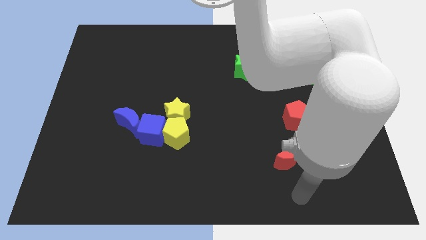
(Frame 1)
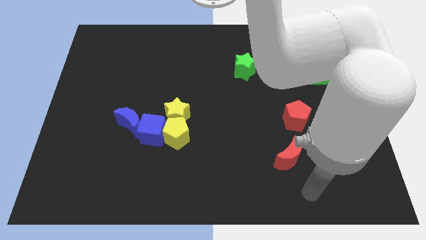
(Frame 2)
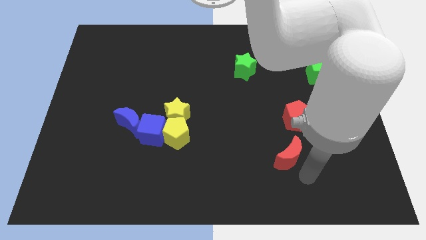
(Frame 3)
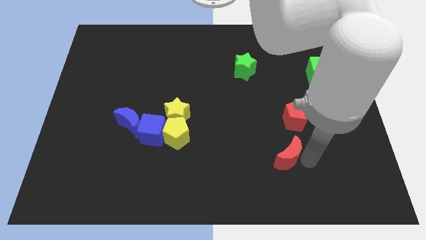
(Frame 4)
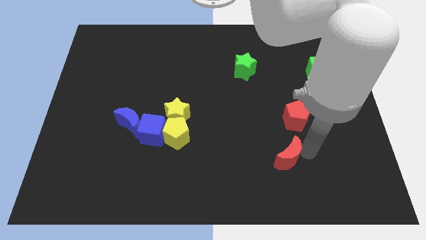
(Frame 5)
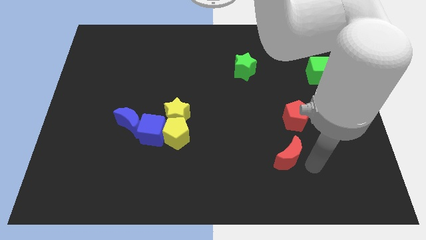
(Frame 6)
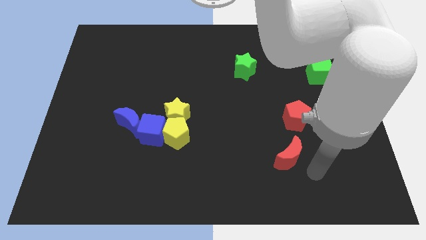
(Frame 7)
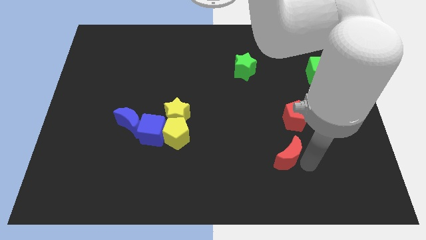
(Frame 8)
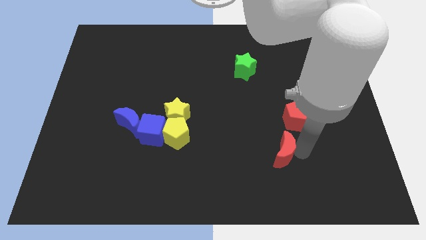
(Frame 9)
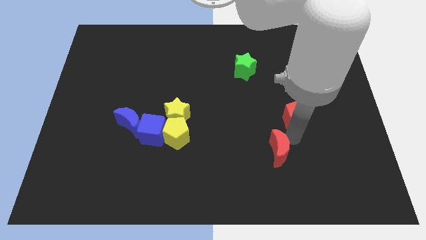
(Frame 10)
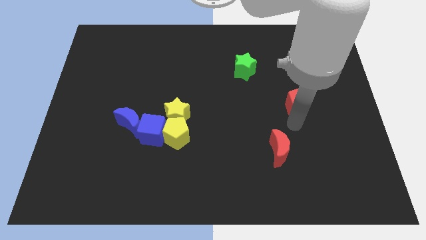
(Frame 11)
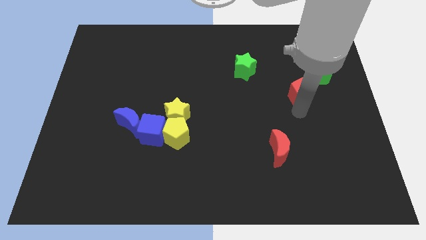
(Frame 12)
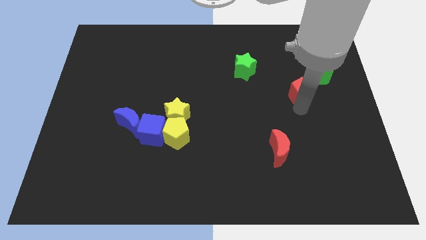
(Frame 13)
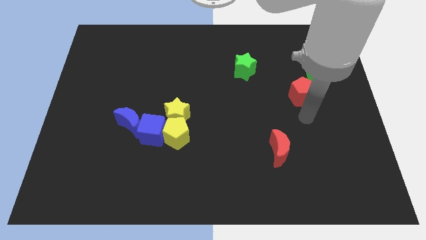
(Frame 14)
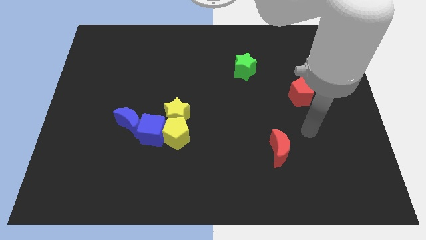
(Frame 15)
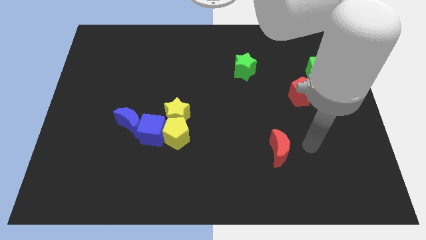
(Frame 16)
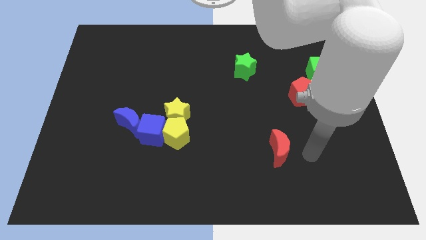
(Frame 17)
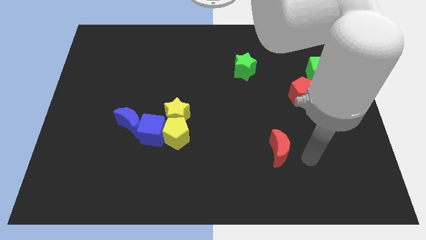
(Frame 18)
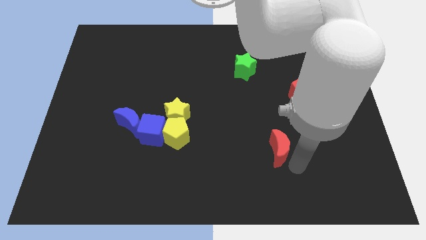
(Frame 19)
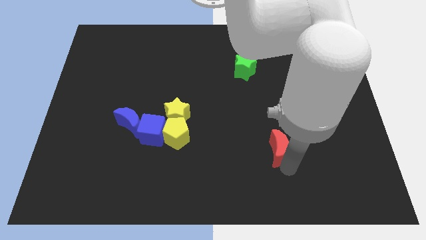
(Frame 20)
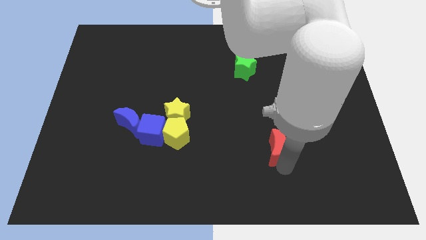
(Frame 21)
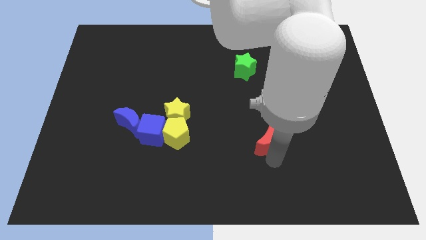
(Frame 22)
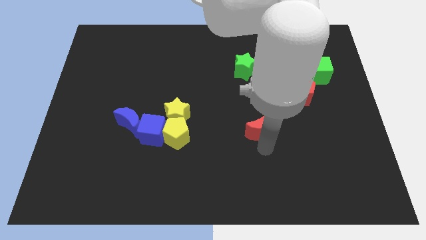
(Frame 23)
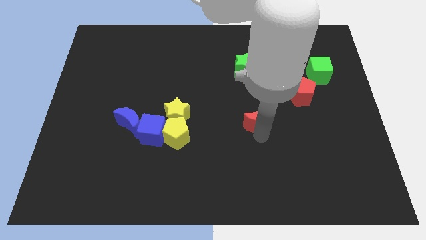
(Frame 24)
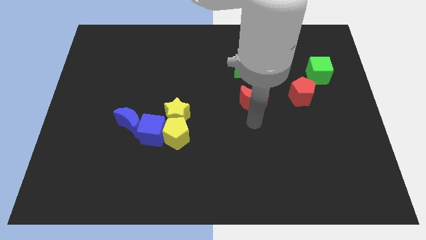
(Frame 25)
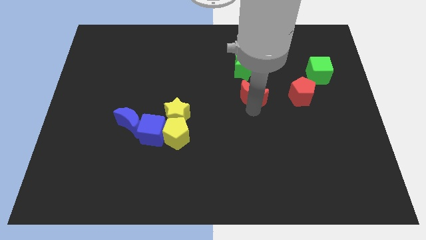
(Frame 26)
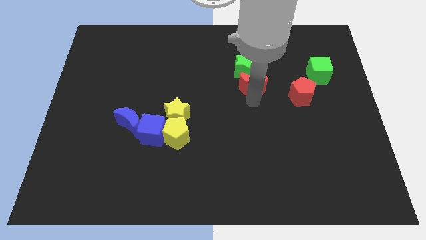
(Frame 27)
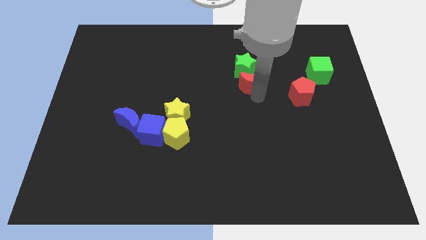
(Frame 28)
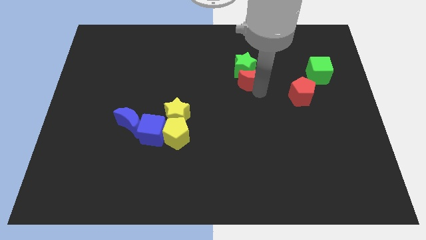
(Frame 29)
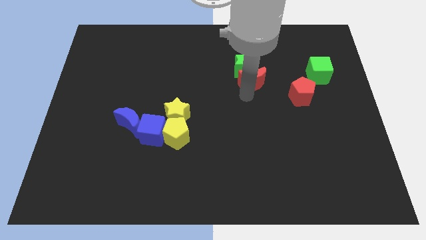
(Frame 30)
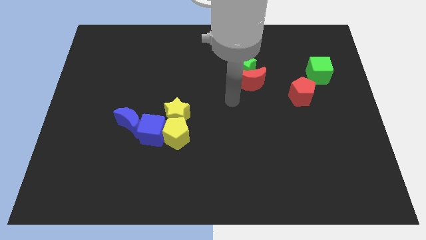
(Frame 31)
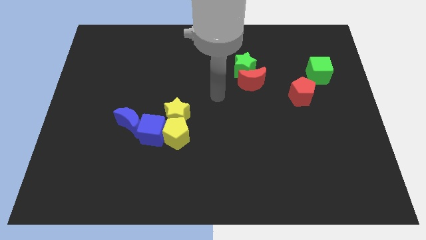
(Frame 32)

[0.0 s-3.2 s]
move the red moon into the green star

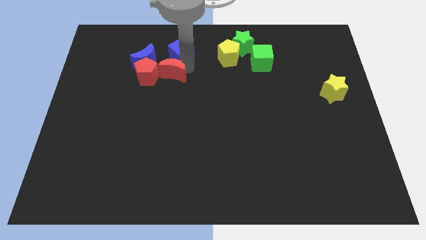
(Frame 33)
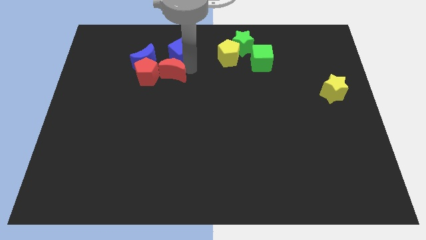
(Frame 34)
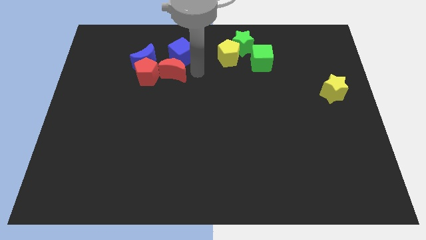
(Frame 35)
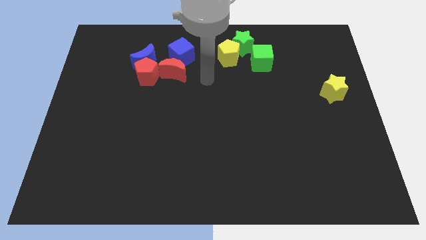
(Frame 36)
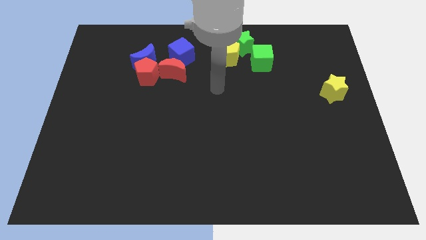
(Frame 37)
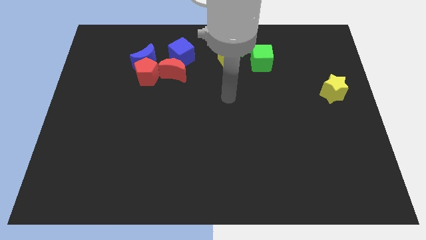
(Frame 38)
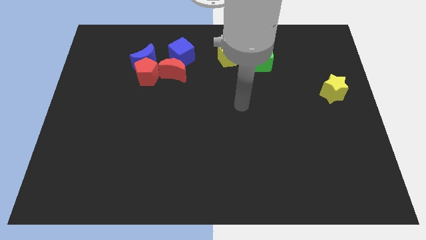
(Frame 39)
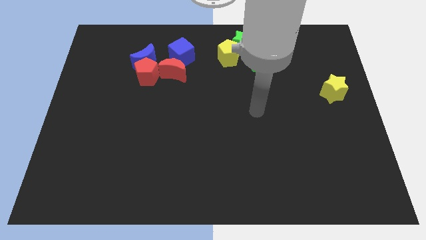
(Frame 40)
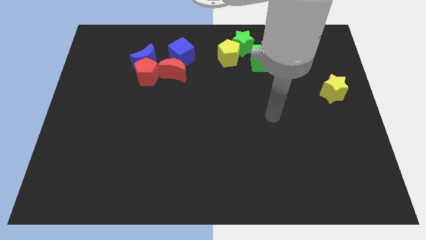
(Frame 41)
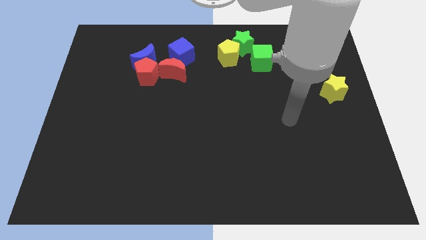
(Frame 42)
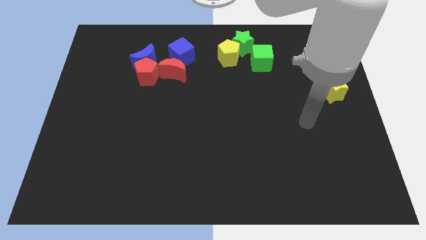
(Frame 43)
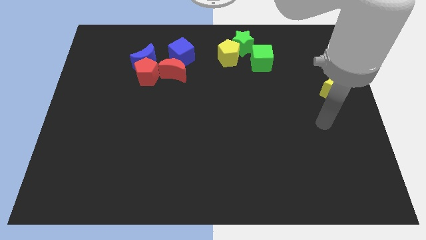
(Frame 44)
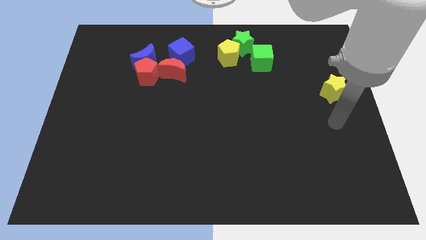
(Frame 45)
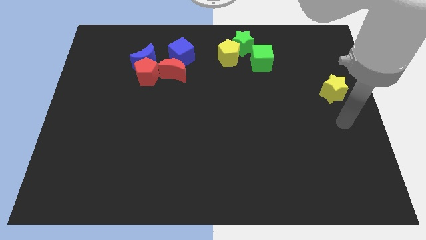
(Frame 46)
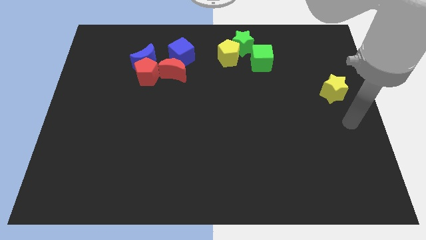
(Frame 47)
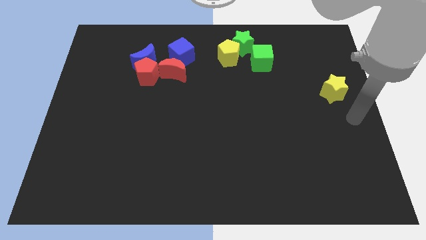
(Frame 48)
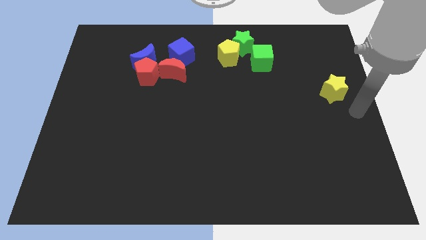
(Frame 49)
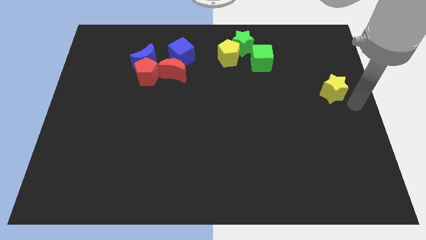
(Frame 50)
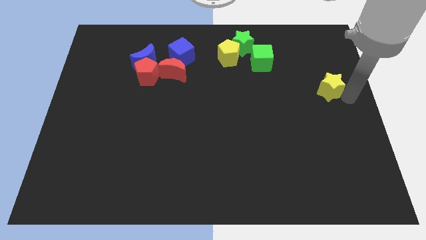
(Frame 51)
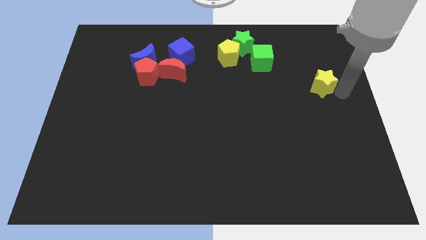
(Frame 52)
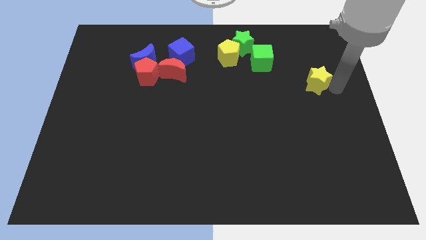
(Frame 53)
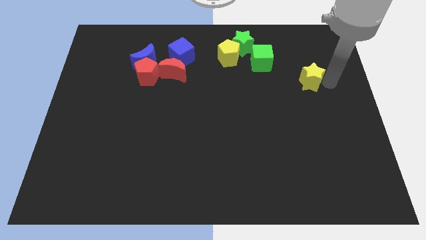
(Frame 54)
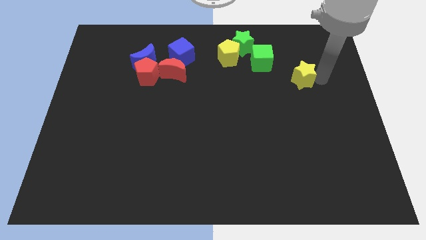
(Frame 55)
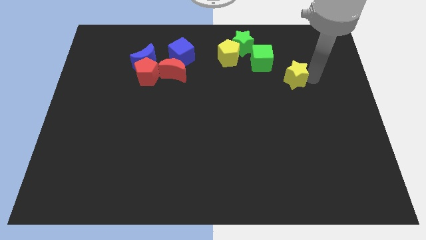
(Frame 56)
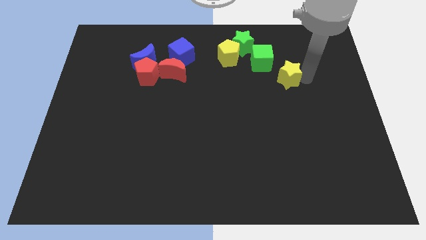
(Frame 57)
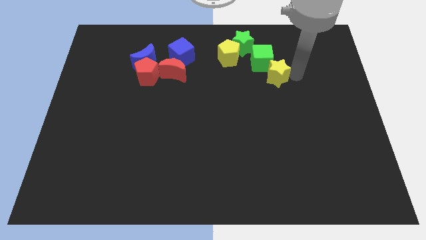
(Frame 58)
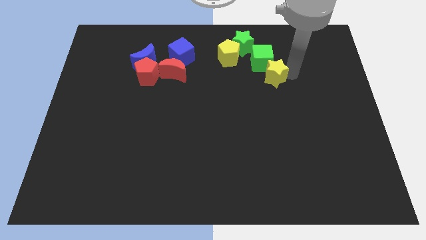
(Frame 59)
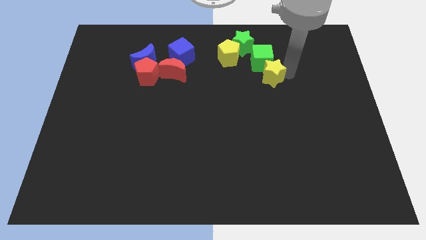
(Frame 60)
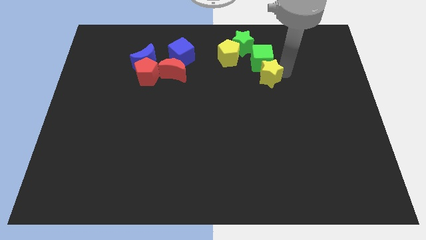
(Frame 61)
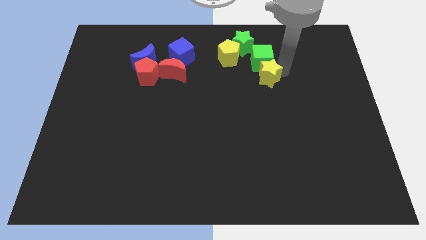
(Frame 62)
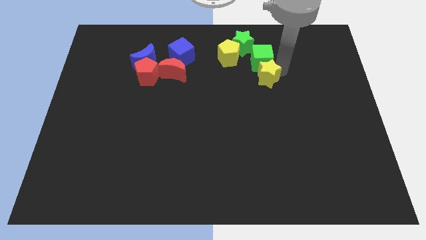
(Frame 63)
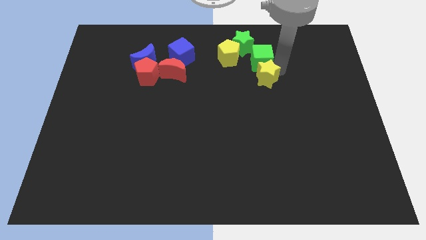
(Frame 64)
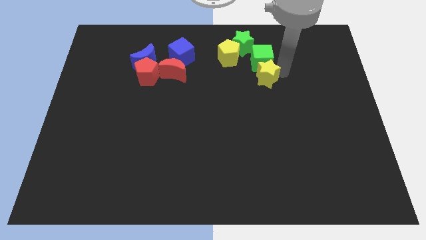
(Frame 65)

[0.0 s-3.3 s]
push the yellow star into the bottom side of the green cube

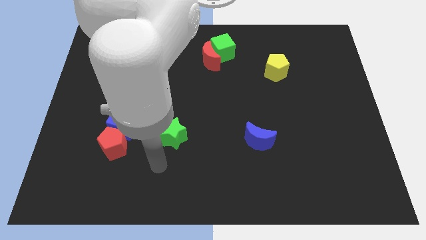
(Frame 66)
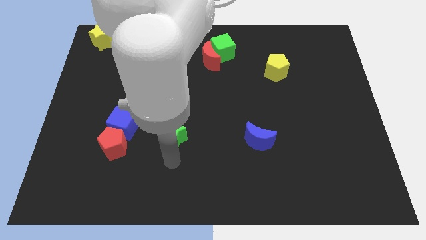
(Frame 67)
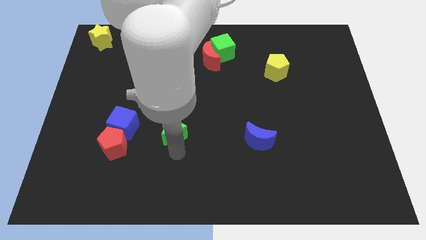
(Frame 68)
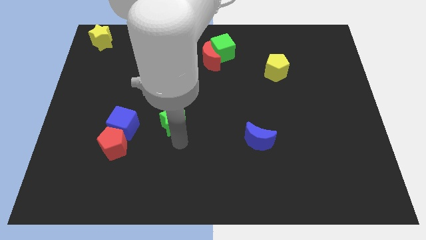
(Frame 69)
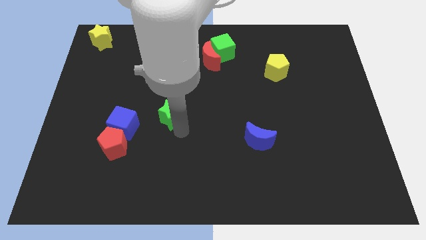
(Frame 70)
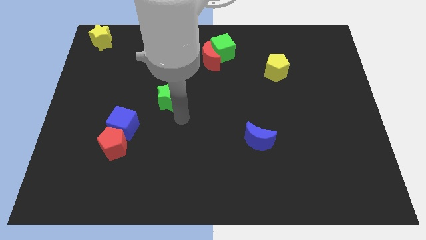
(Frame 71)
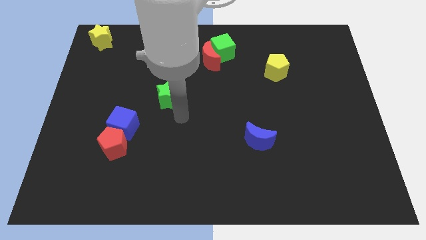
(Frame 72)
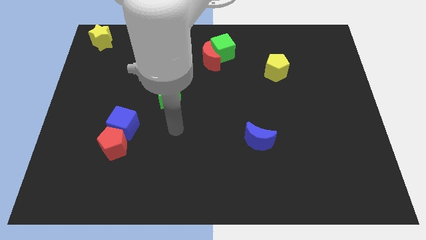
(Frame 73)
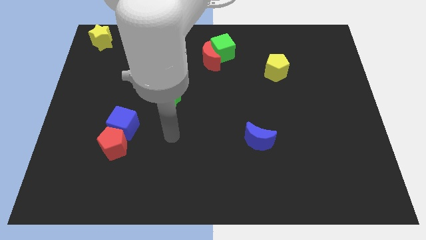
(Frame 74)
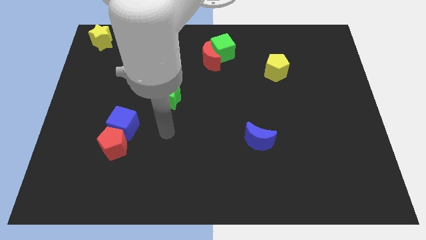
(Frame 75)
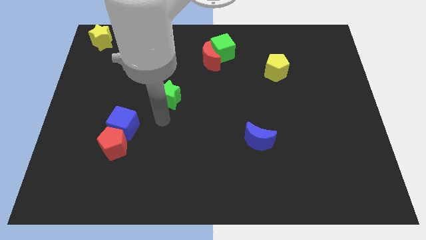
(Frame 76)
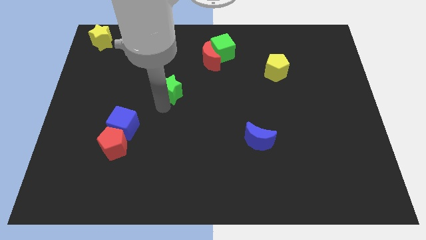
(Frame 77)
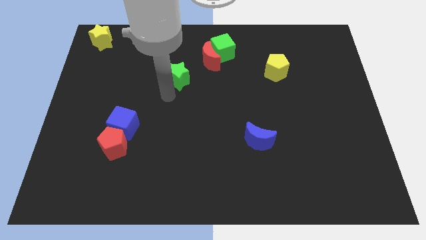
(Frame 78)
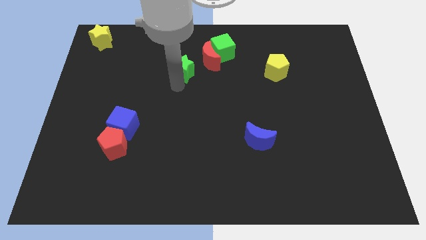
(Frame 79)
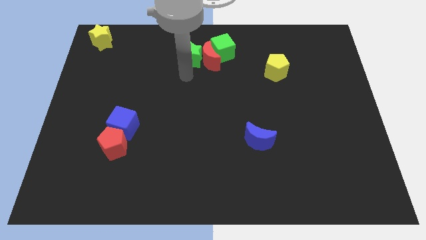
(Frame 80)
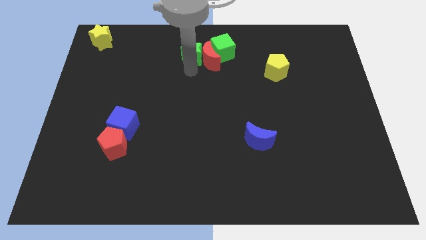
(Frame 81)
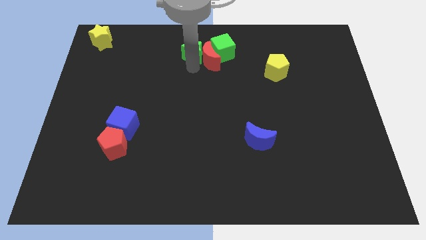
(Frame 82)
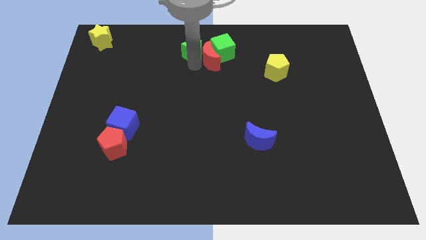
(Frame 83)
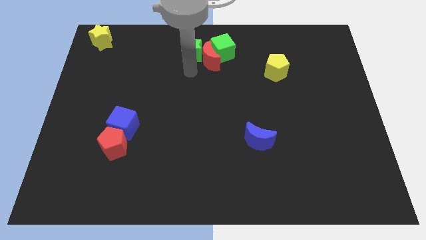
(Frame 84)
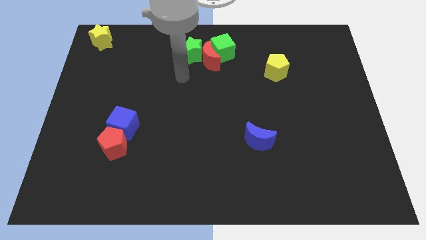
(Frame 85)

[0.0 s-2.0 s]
place the green star to the left of red crescent

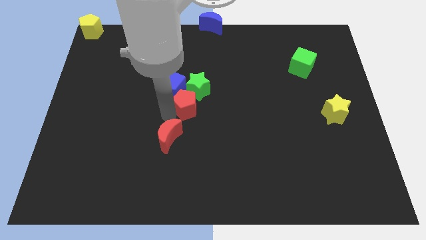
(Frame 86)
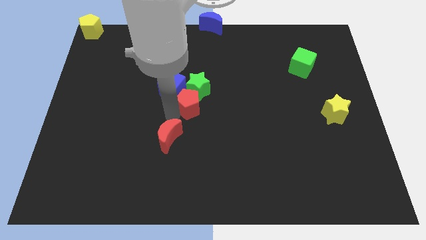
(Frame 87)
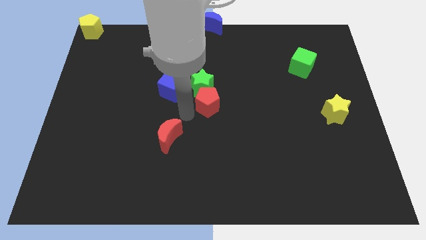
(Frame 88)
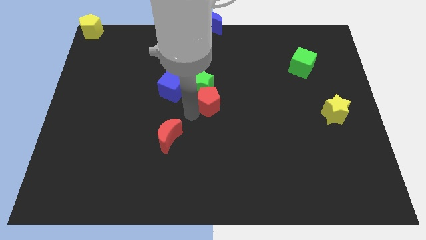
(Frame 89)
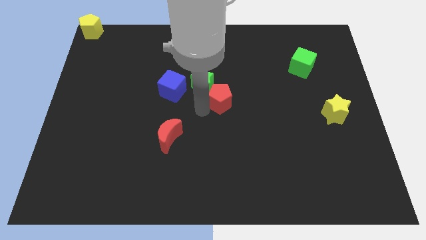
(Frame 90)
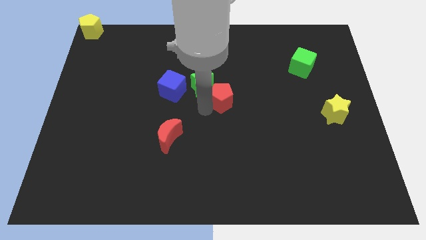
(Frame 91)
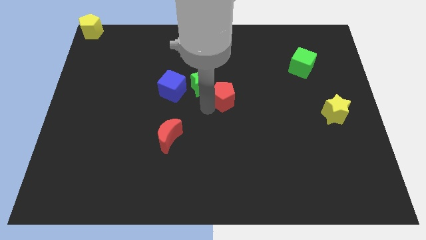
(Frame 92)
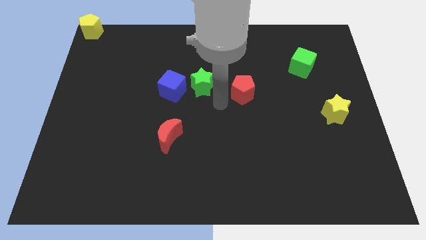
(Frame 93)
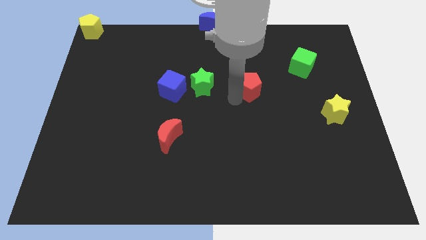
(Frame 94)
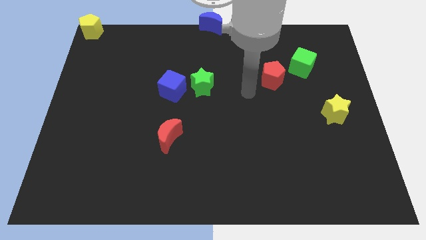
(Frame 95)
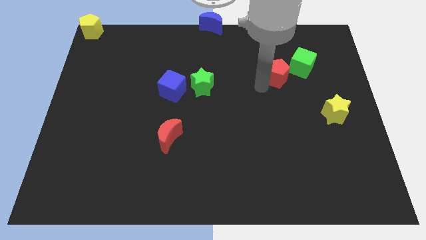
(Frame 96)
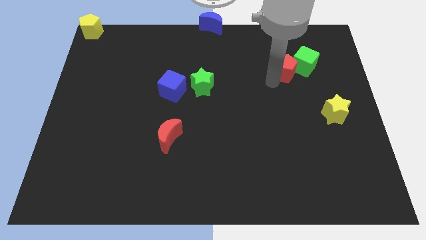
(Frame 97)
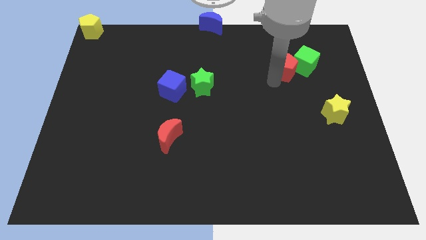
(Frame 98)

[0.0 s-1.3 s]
separate the red pentagon from the green star and red moon
